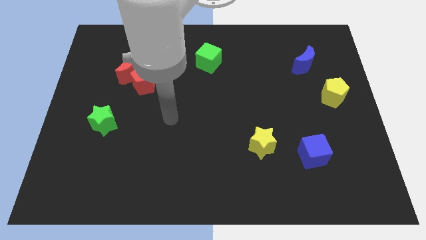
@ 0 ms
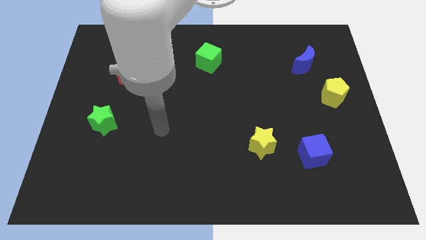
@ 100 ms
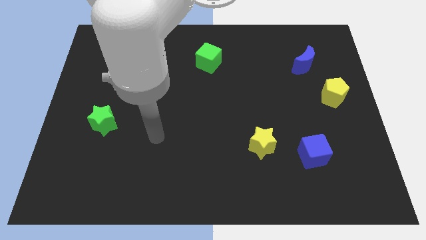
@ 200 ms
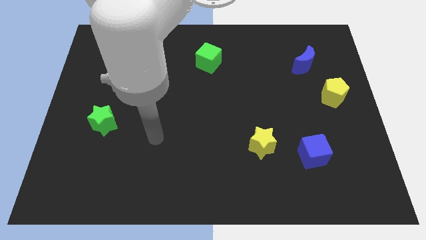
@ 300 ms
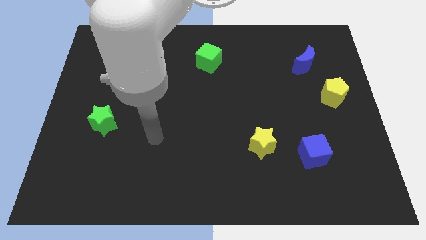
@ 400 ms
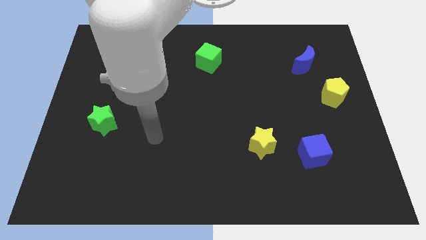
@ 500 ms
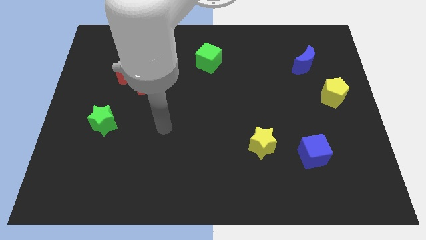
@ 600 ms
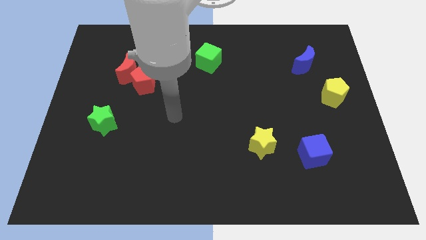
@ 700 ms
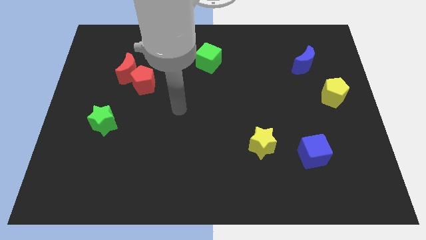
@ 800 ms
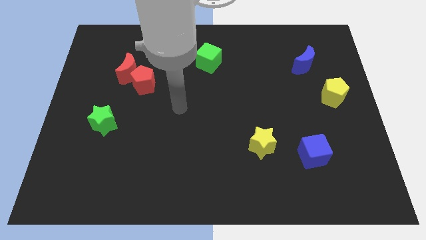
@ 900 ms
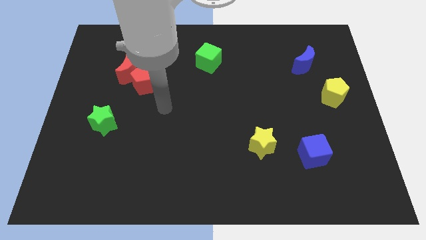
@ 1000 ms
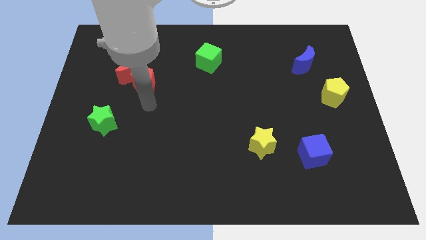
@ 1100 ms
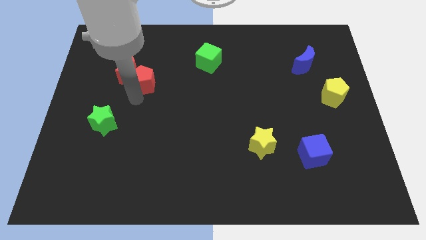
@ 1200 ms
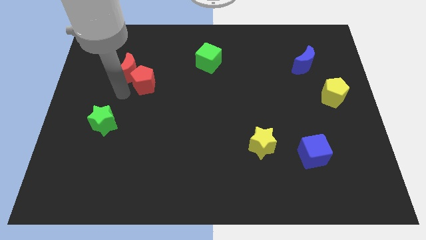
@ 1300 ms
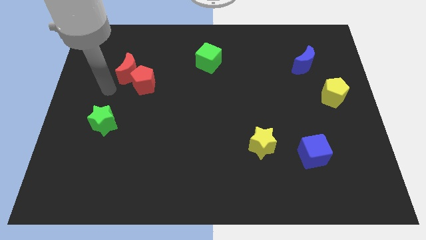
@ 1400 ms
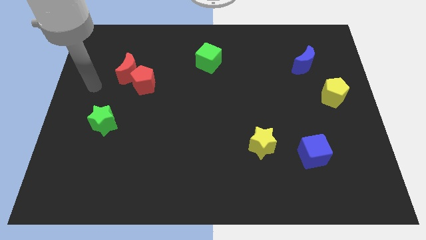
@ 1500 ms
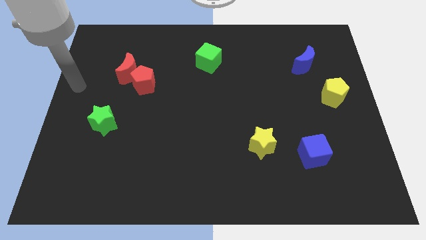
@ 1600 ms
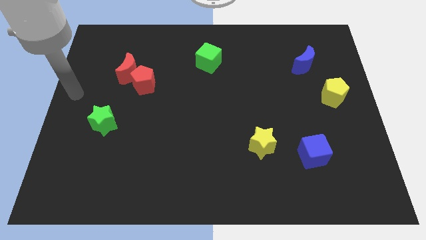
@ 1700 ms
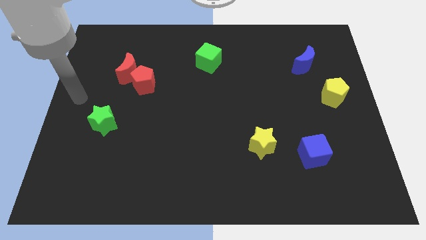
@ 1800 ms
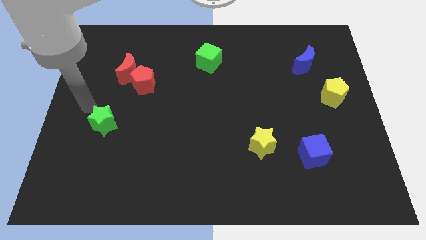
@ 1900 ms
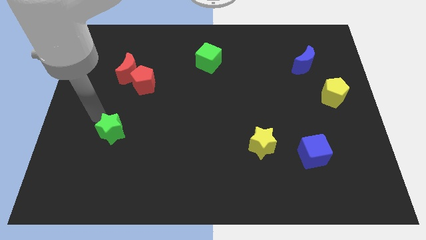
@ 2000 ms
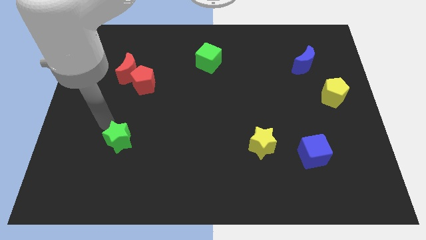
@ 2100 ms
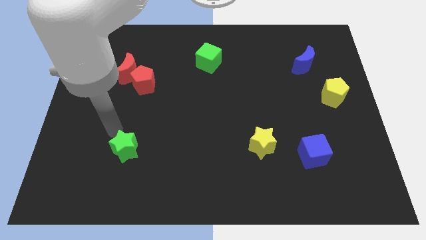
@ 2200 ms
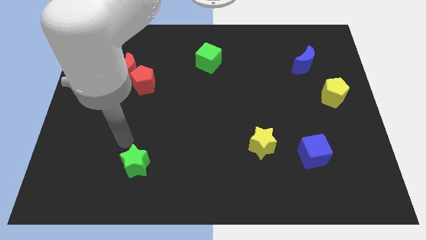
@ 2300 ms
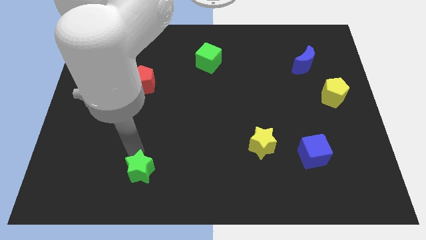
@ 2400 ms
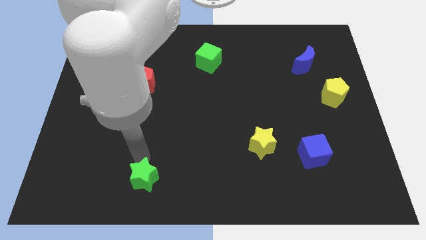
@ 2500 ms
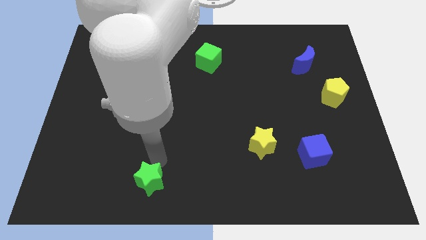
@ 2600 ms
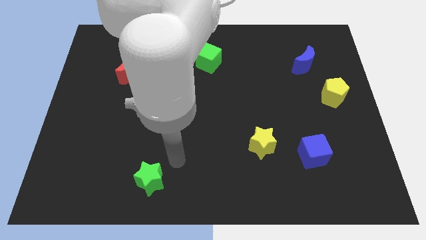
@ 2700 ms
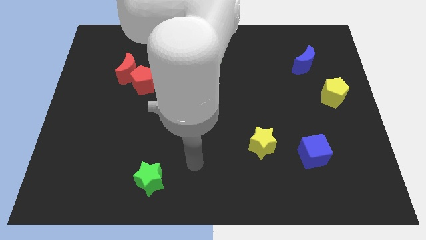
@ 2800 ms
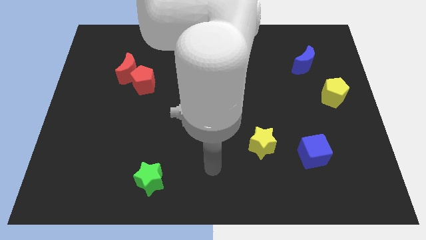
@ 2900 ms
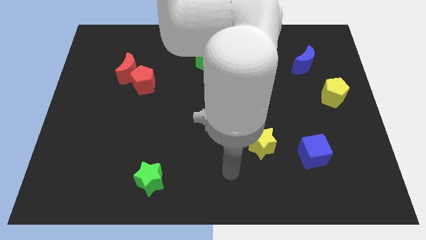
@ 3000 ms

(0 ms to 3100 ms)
push green star towards bottom center

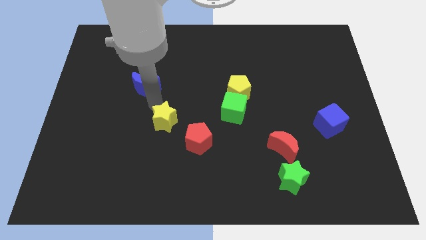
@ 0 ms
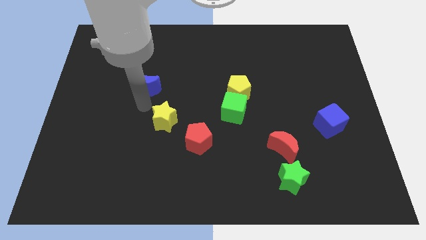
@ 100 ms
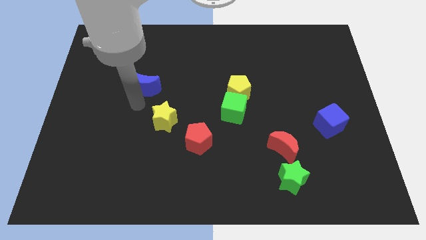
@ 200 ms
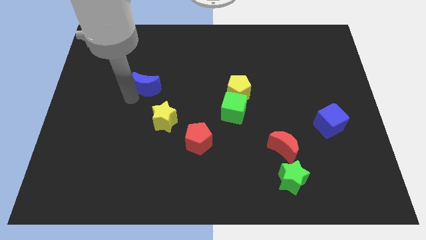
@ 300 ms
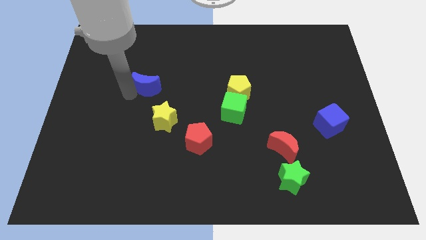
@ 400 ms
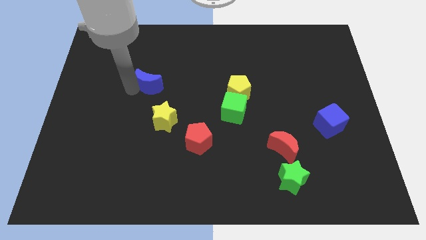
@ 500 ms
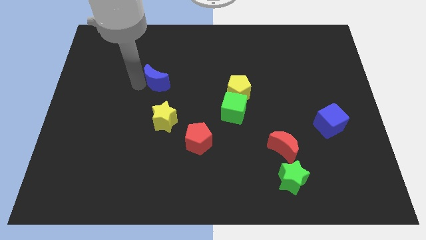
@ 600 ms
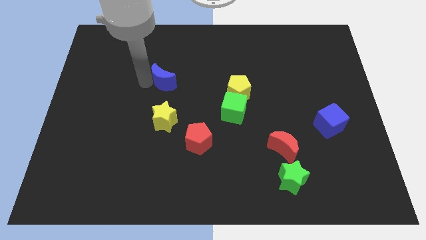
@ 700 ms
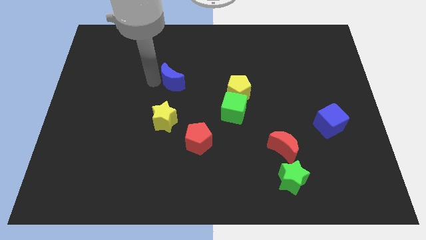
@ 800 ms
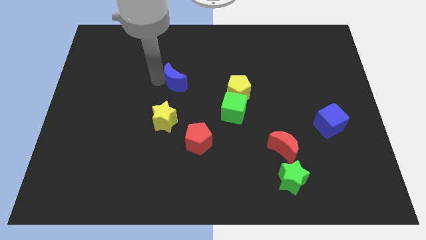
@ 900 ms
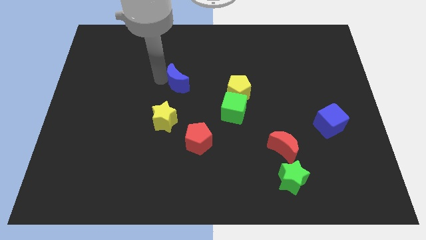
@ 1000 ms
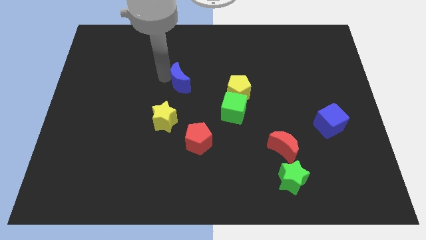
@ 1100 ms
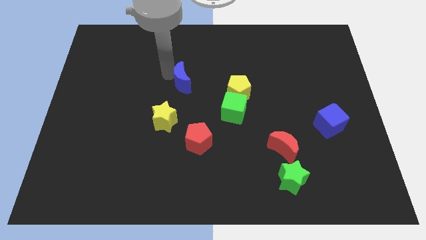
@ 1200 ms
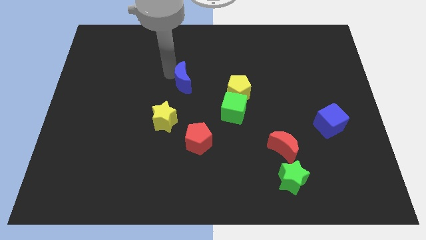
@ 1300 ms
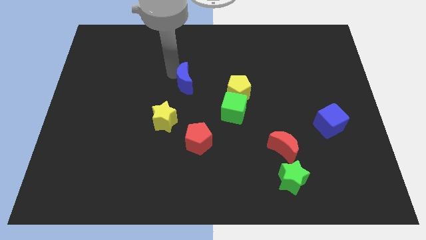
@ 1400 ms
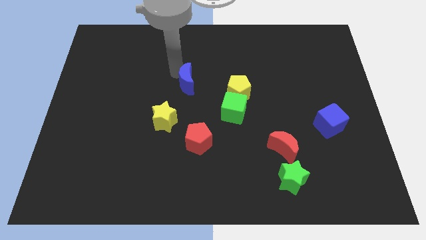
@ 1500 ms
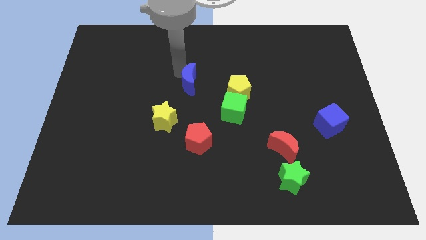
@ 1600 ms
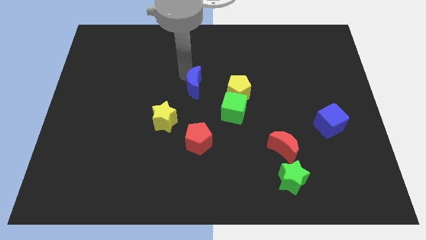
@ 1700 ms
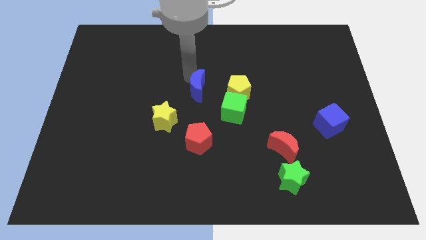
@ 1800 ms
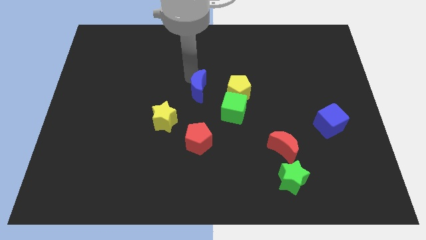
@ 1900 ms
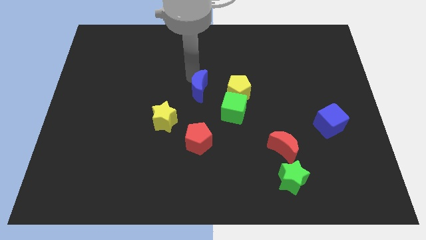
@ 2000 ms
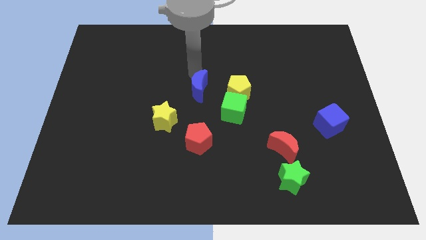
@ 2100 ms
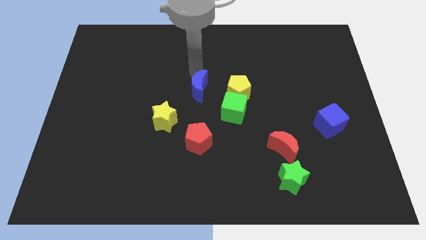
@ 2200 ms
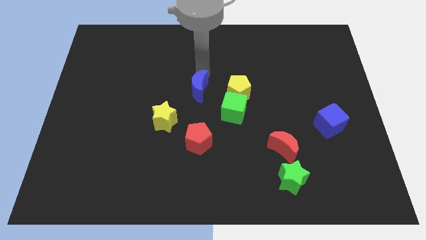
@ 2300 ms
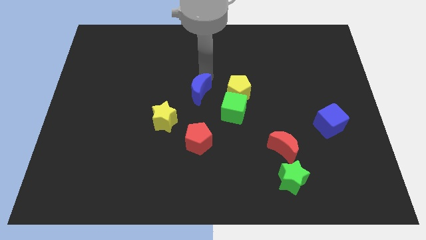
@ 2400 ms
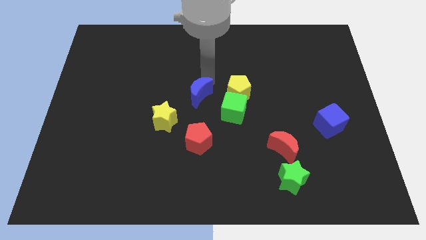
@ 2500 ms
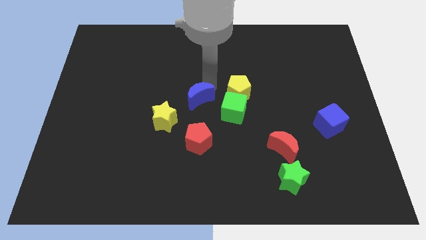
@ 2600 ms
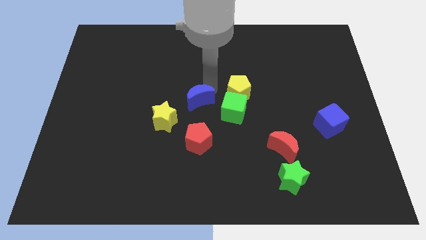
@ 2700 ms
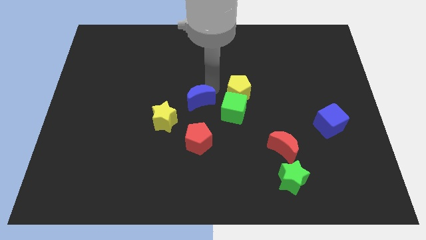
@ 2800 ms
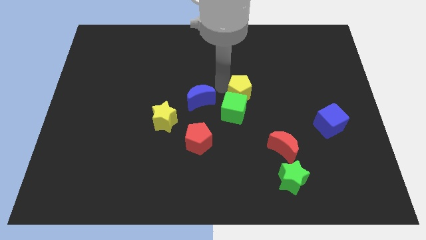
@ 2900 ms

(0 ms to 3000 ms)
move the blue crescent towards the center of the board

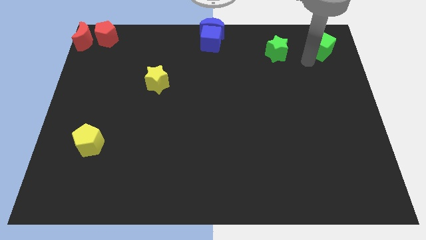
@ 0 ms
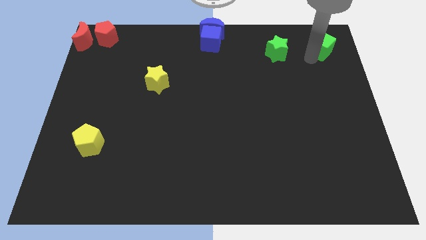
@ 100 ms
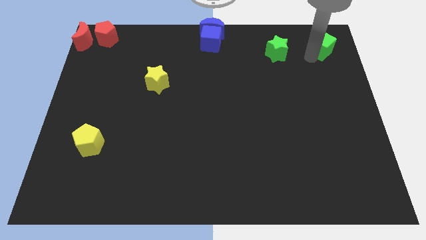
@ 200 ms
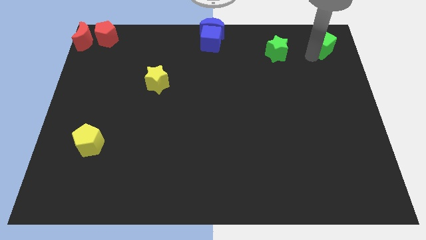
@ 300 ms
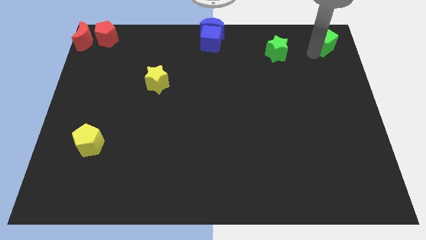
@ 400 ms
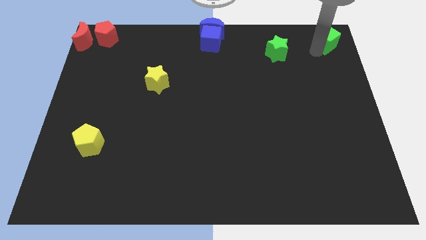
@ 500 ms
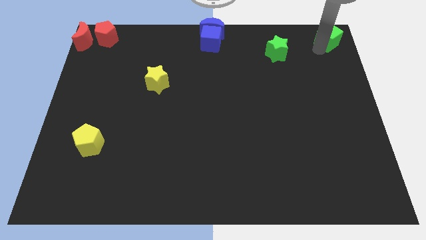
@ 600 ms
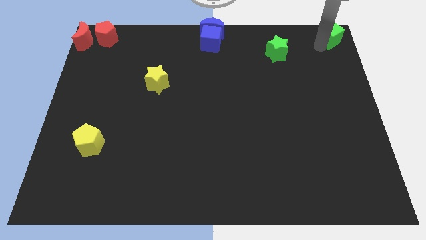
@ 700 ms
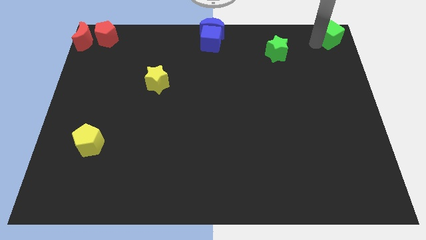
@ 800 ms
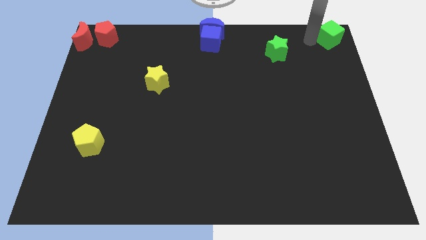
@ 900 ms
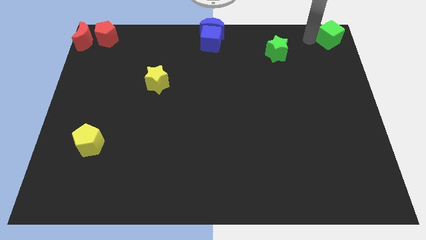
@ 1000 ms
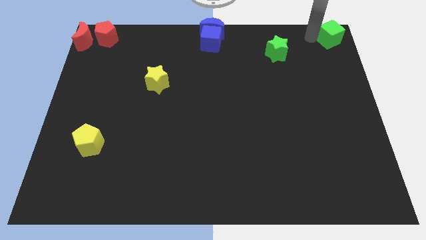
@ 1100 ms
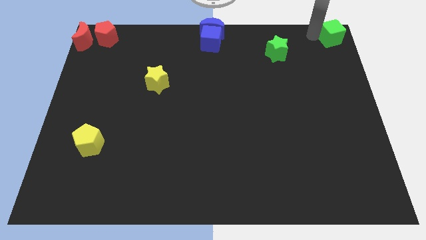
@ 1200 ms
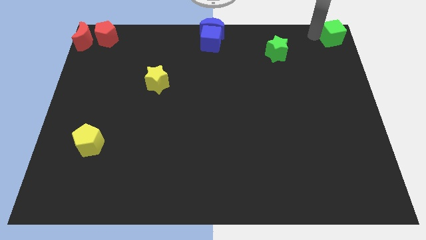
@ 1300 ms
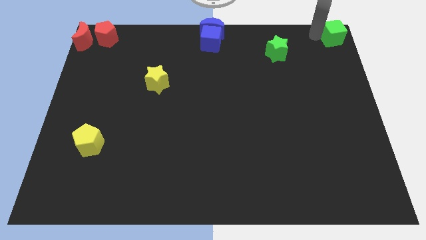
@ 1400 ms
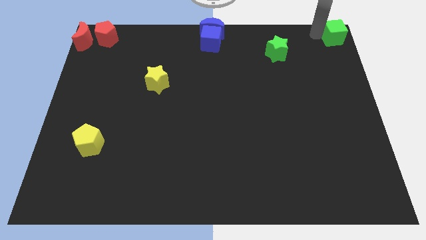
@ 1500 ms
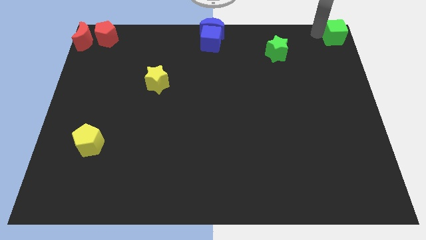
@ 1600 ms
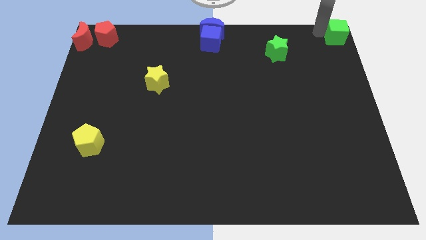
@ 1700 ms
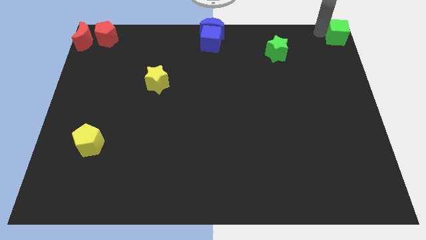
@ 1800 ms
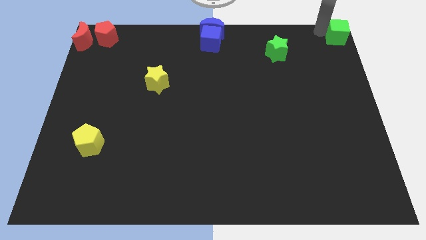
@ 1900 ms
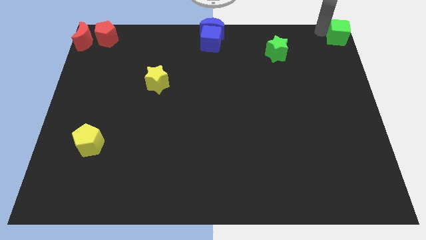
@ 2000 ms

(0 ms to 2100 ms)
move the green cube towards the top right corner of the board

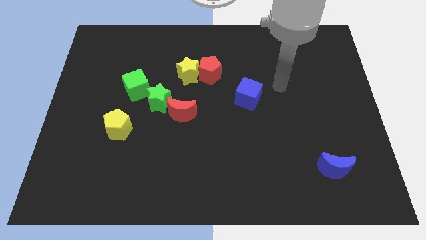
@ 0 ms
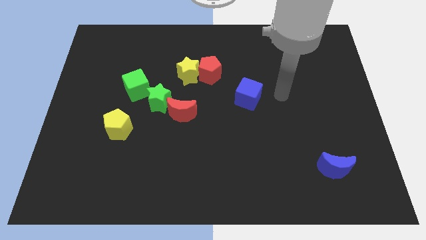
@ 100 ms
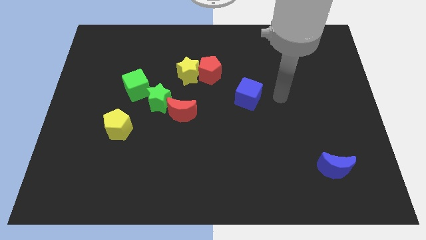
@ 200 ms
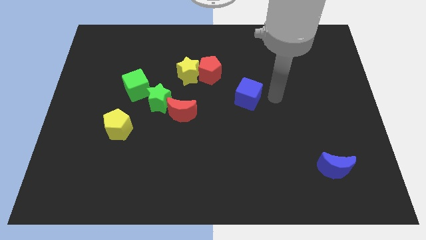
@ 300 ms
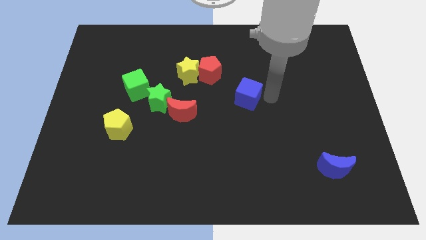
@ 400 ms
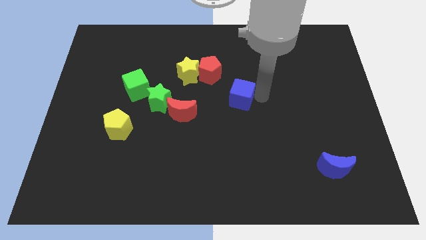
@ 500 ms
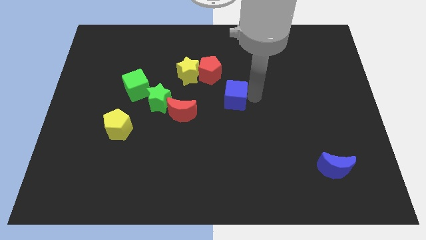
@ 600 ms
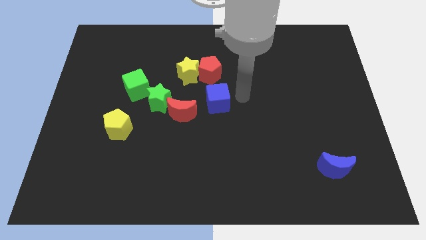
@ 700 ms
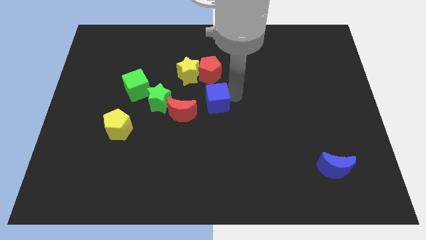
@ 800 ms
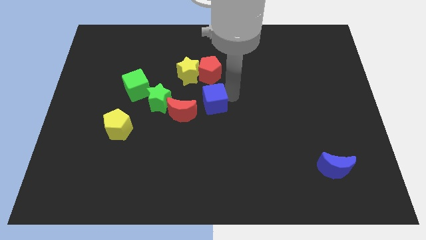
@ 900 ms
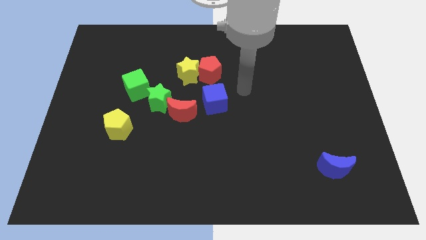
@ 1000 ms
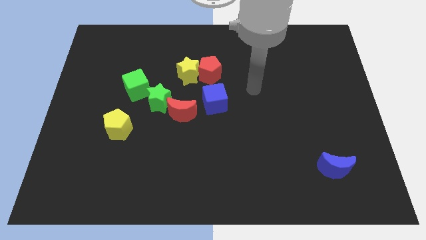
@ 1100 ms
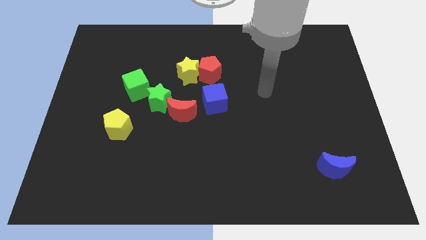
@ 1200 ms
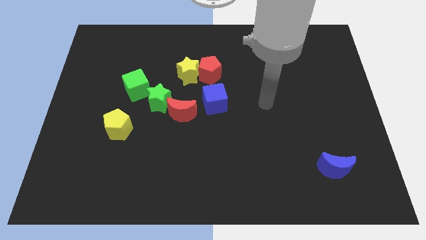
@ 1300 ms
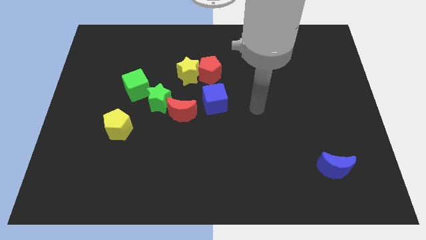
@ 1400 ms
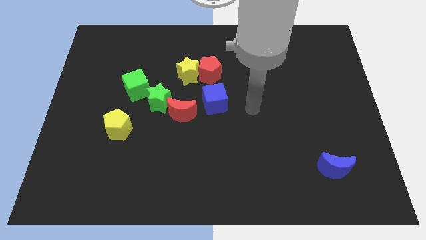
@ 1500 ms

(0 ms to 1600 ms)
place the blue cube below the red pentagon